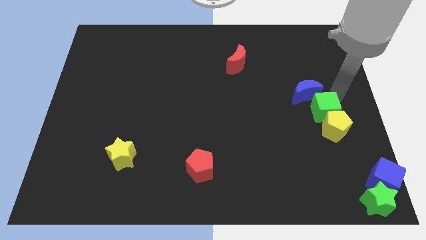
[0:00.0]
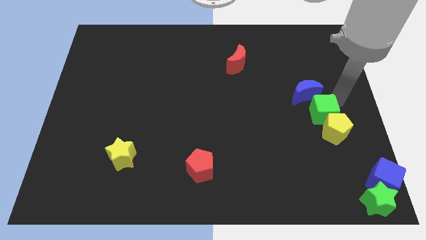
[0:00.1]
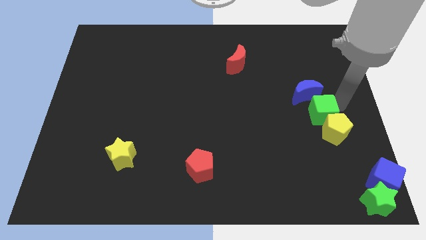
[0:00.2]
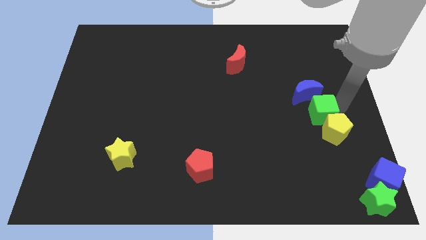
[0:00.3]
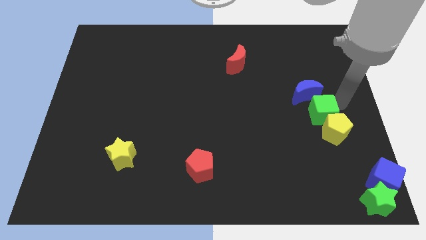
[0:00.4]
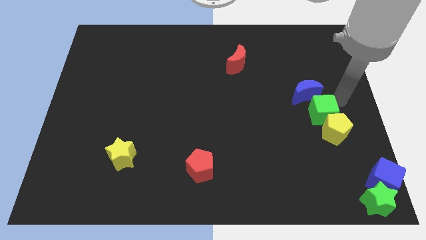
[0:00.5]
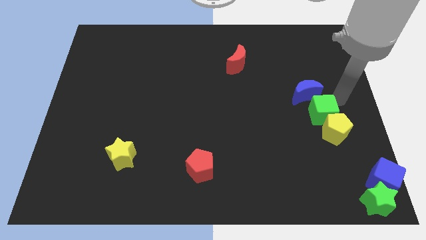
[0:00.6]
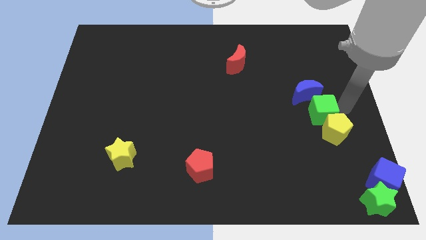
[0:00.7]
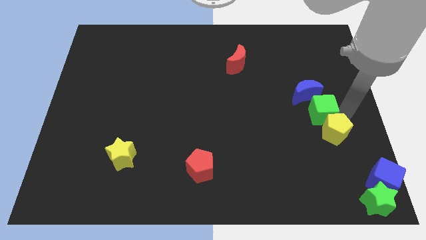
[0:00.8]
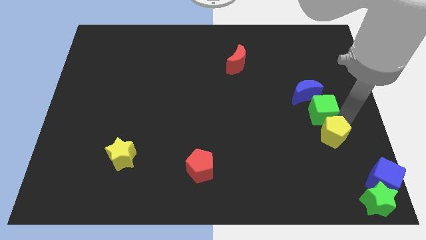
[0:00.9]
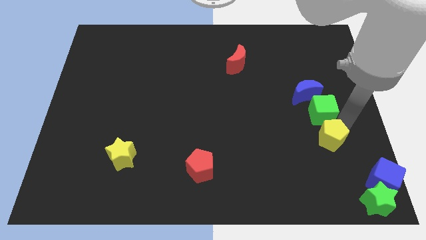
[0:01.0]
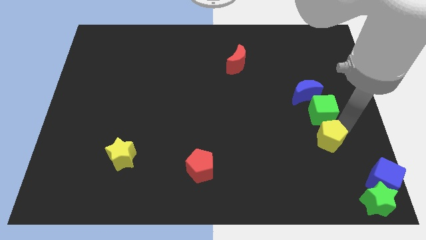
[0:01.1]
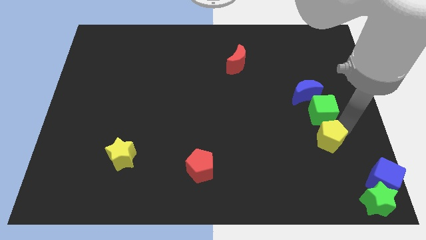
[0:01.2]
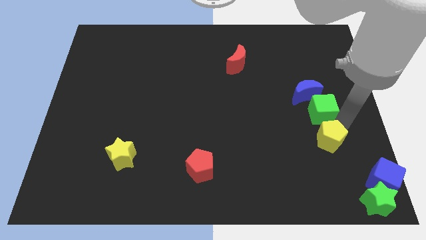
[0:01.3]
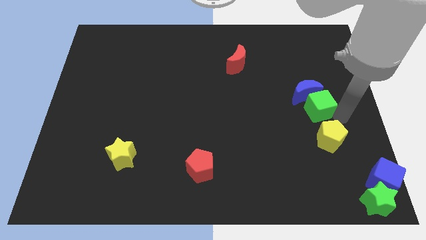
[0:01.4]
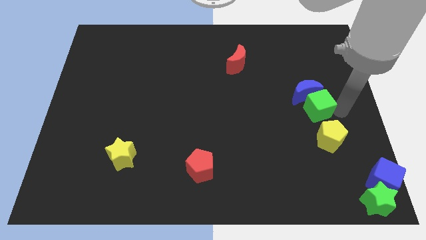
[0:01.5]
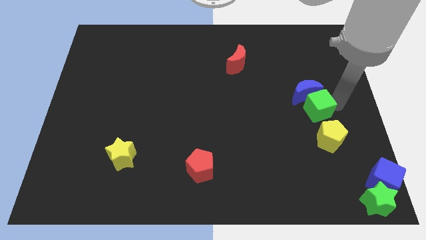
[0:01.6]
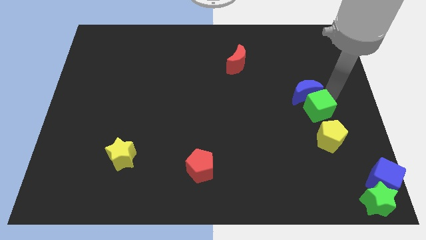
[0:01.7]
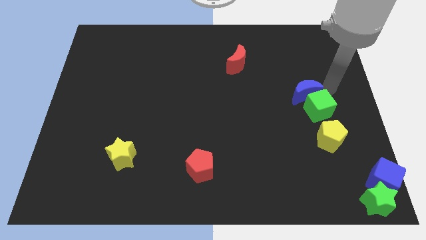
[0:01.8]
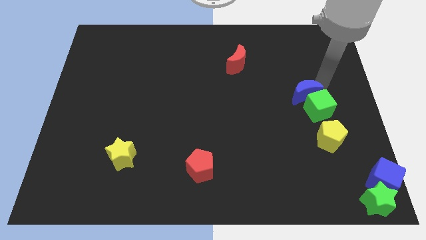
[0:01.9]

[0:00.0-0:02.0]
separate the yellow pentagon from the green cube

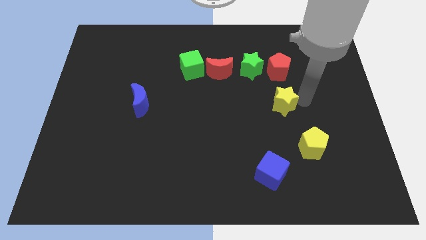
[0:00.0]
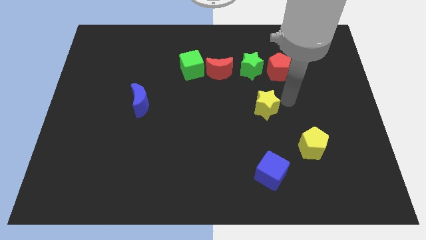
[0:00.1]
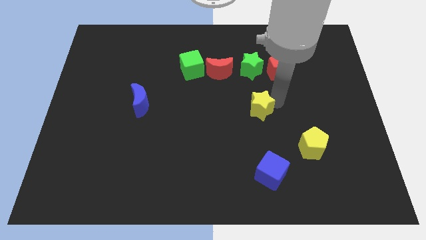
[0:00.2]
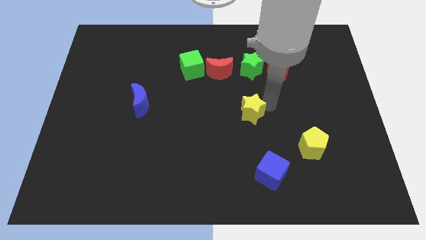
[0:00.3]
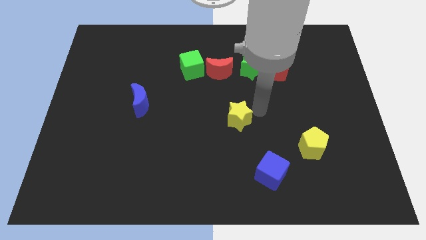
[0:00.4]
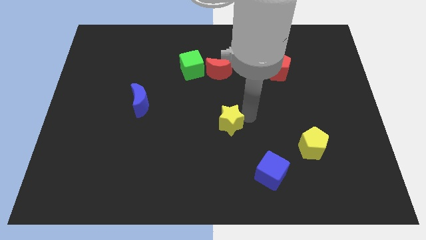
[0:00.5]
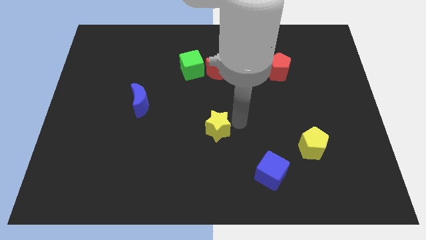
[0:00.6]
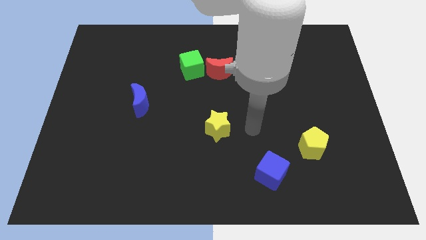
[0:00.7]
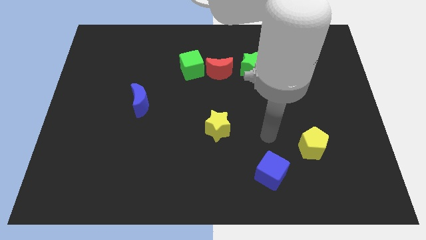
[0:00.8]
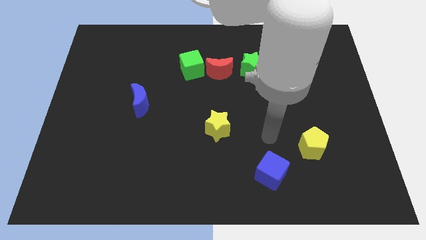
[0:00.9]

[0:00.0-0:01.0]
drag the yellow star to the left

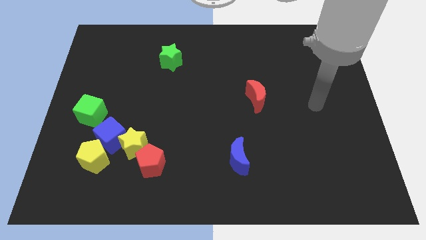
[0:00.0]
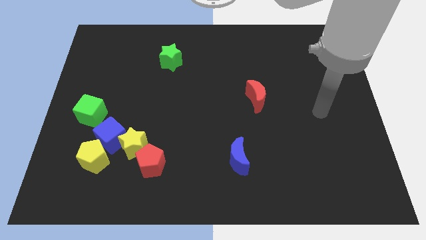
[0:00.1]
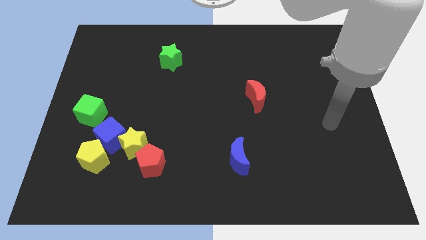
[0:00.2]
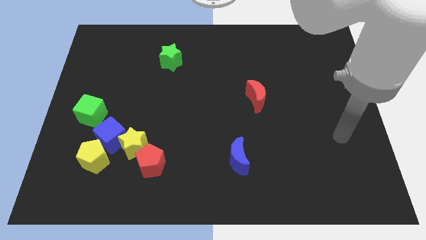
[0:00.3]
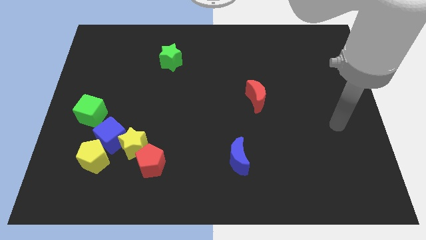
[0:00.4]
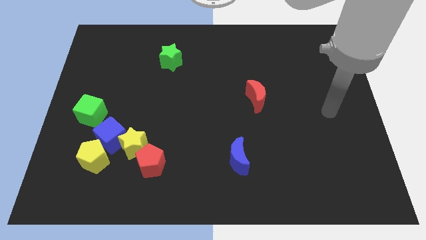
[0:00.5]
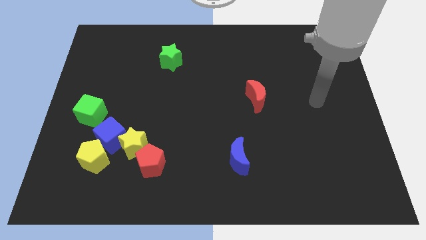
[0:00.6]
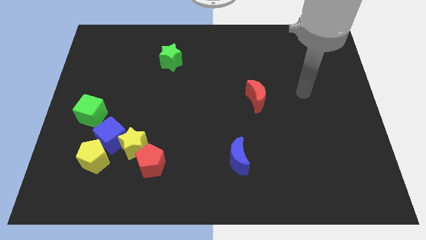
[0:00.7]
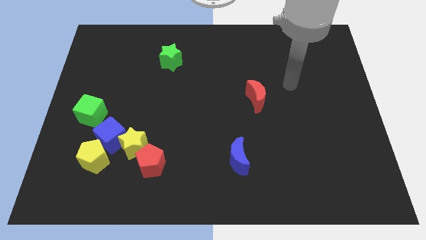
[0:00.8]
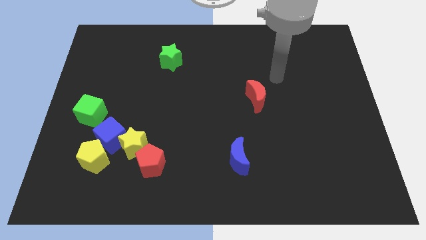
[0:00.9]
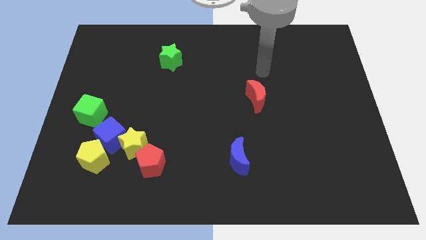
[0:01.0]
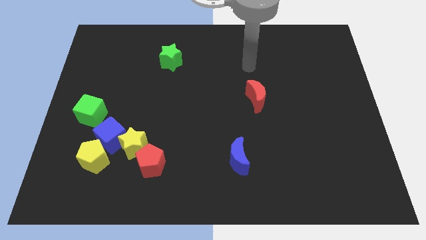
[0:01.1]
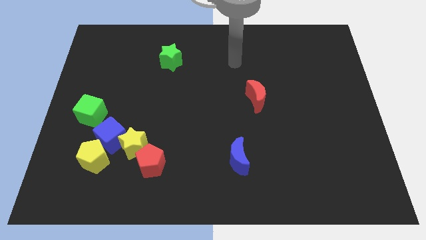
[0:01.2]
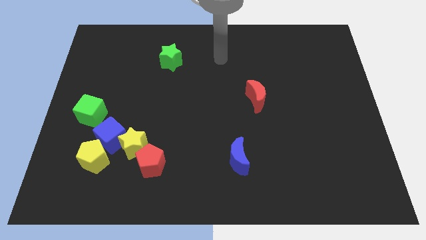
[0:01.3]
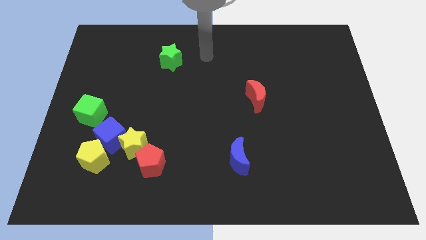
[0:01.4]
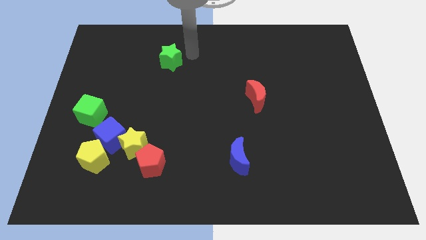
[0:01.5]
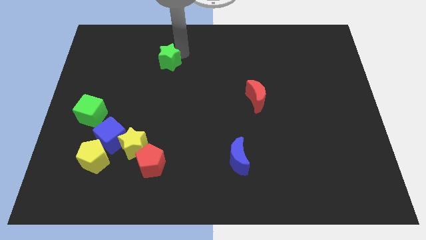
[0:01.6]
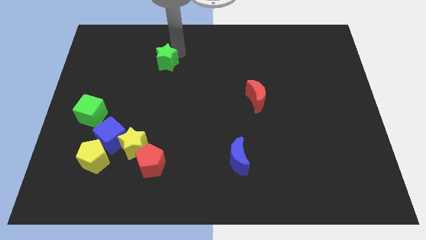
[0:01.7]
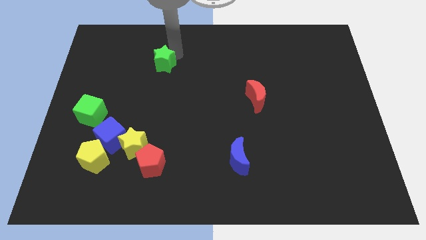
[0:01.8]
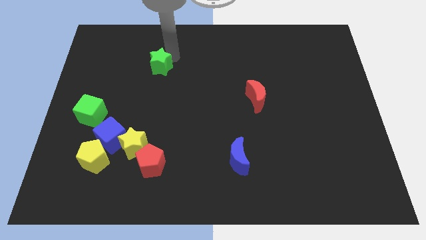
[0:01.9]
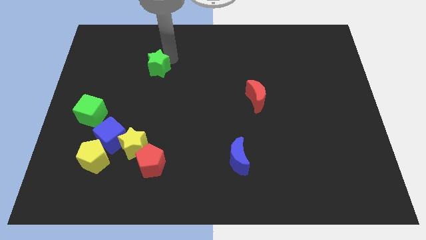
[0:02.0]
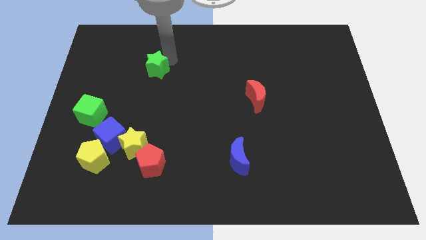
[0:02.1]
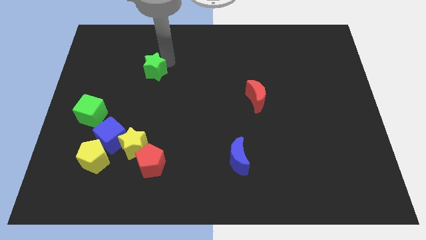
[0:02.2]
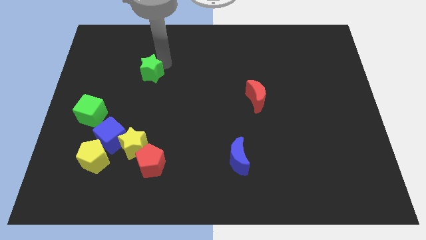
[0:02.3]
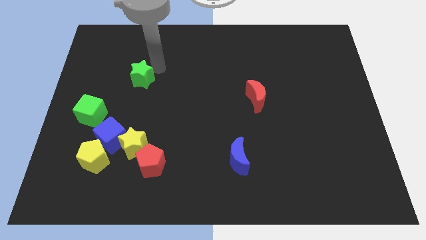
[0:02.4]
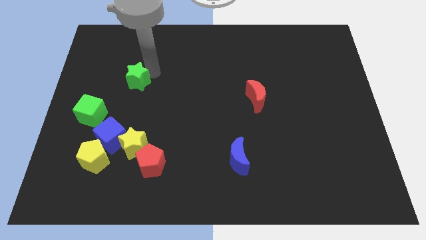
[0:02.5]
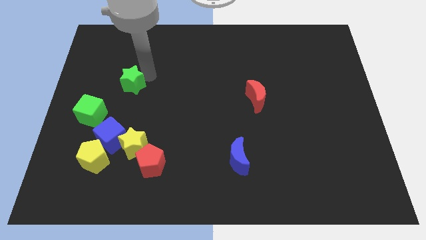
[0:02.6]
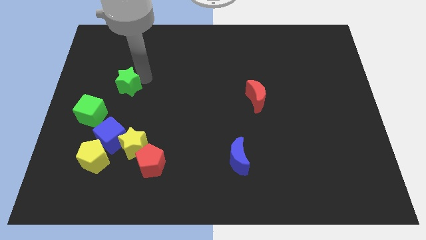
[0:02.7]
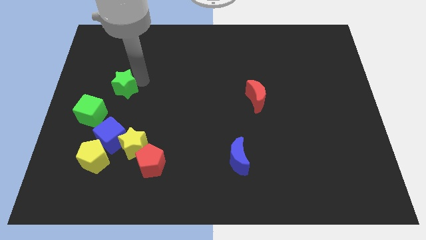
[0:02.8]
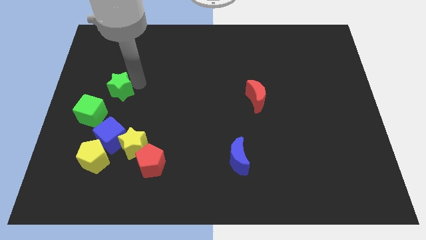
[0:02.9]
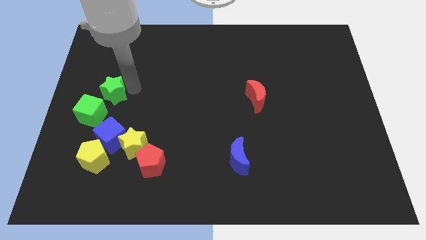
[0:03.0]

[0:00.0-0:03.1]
move the green star towards the top side of the green cube

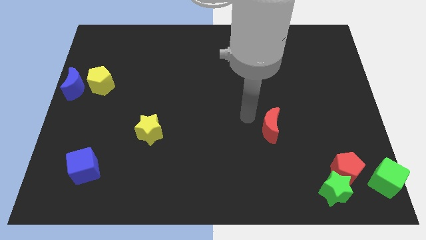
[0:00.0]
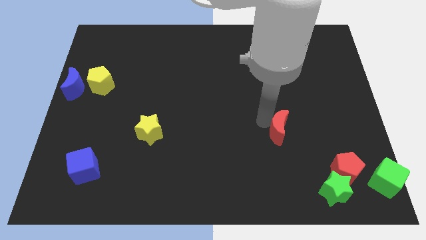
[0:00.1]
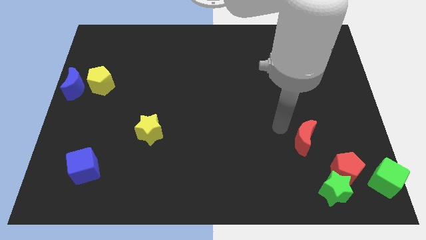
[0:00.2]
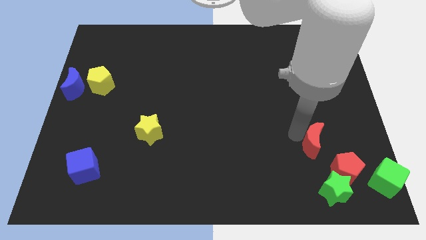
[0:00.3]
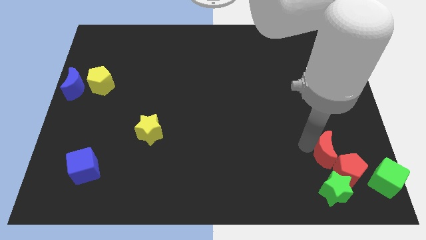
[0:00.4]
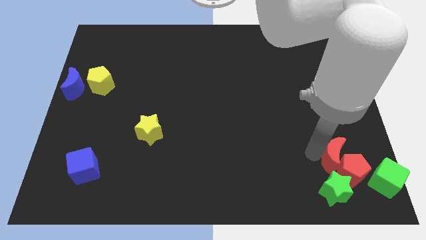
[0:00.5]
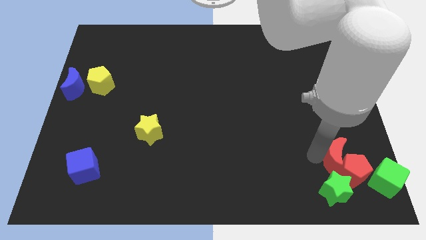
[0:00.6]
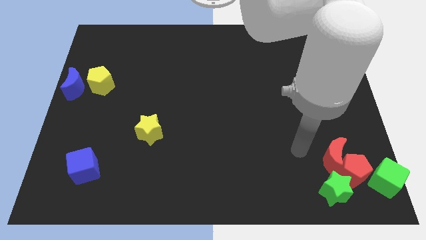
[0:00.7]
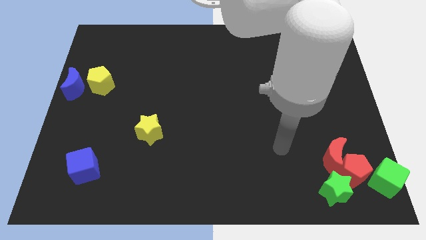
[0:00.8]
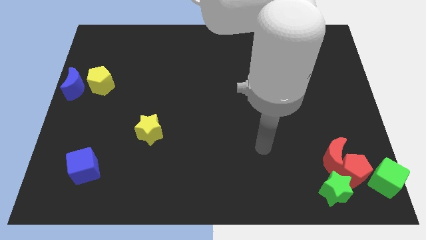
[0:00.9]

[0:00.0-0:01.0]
push the red crescent into the red pentagon at the bottom right corner of the board

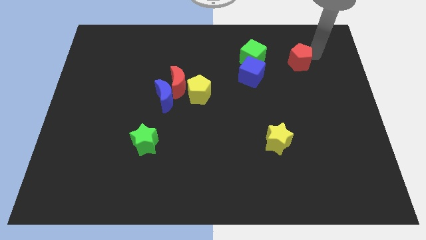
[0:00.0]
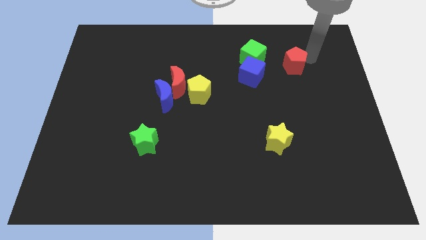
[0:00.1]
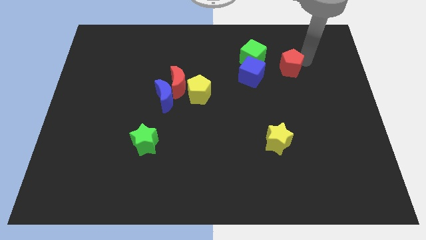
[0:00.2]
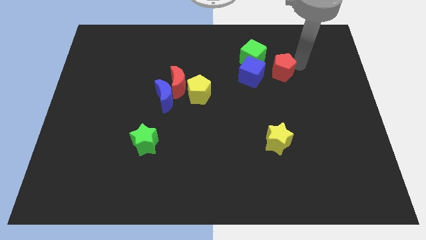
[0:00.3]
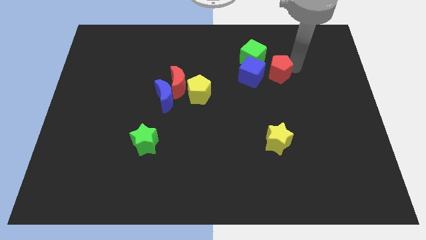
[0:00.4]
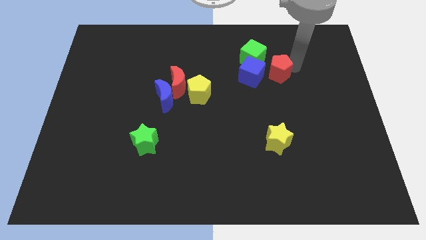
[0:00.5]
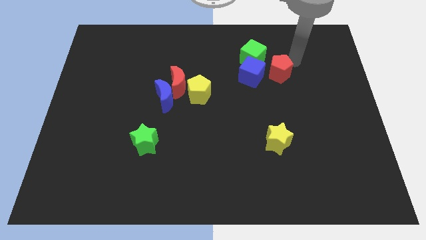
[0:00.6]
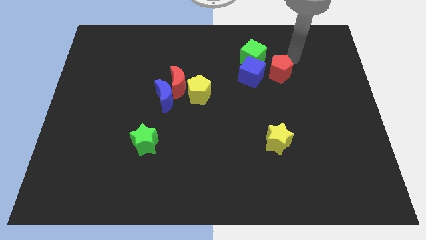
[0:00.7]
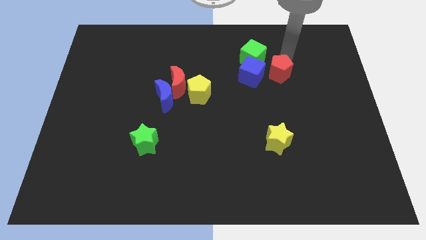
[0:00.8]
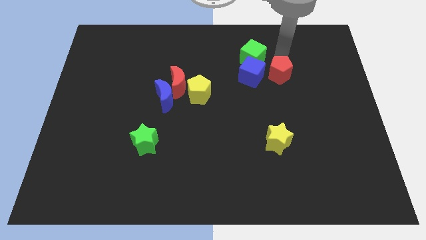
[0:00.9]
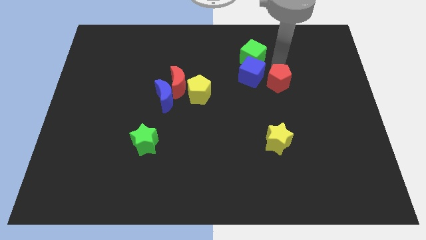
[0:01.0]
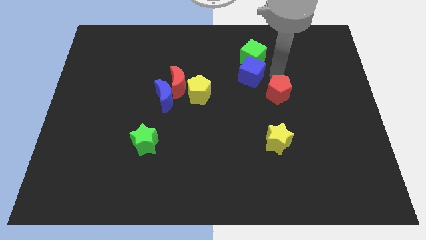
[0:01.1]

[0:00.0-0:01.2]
slide the red pentagon diagonally bottom right to the blue cube

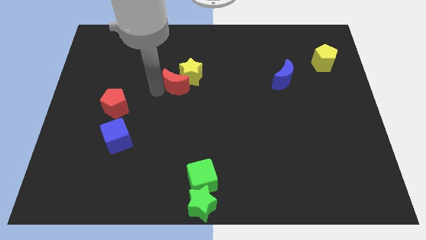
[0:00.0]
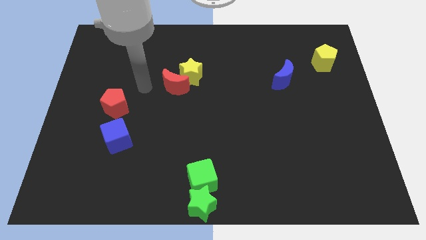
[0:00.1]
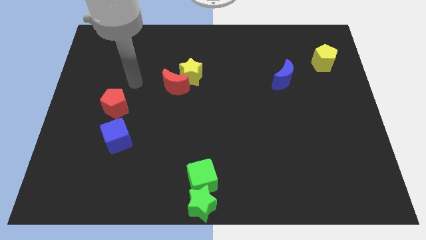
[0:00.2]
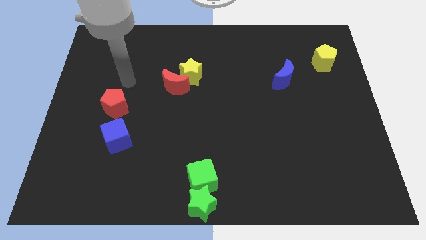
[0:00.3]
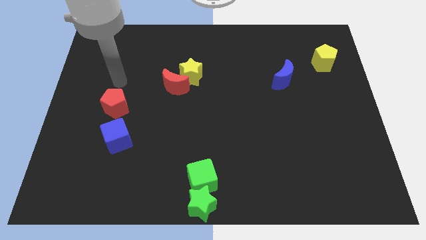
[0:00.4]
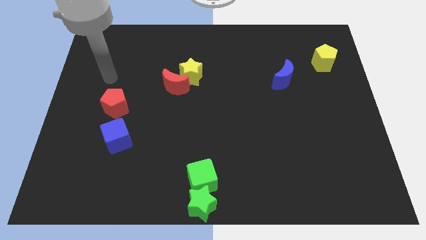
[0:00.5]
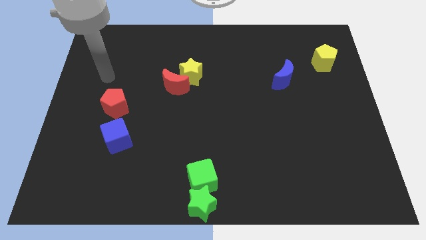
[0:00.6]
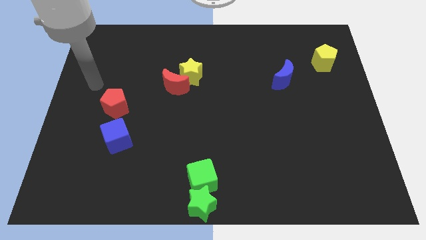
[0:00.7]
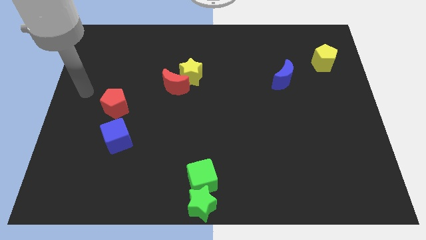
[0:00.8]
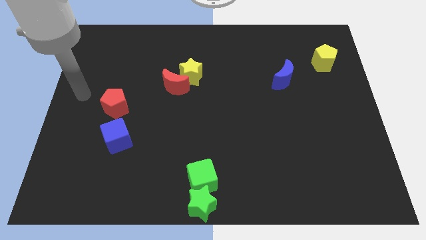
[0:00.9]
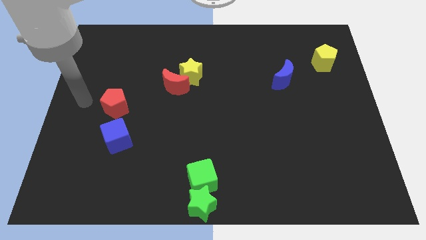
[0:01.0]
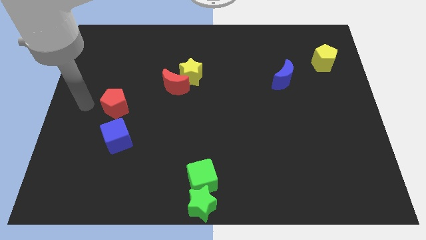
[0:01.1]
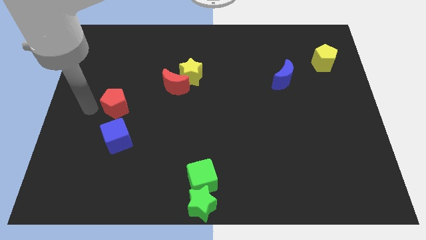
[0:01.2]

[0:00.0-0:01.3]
move yourself to the left side of the red pentagon
